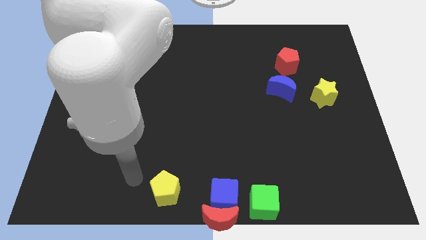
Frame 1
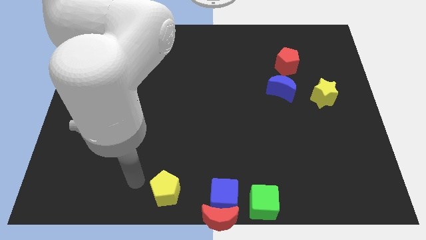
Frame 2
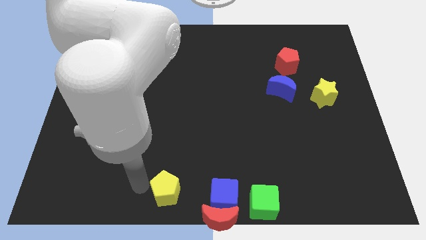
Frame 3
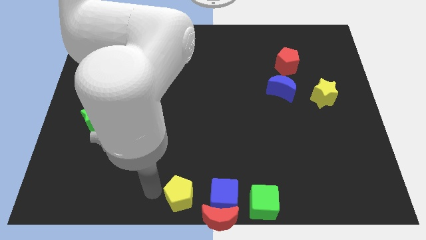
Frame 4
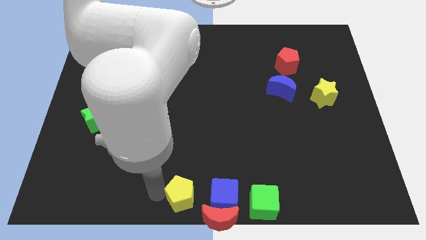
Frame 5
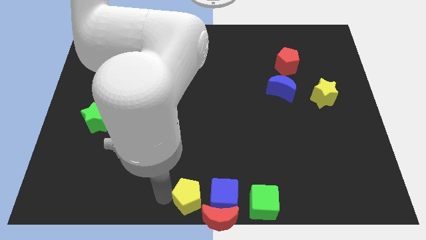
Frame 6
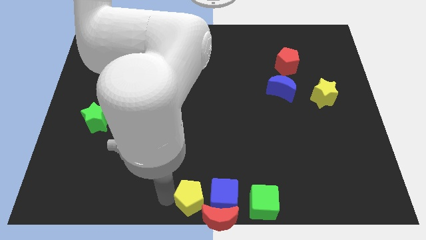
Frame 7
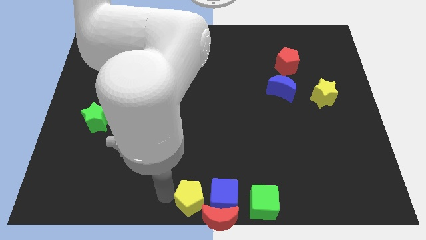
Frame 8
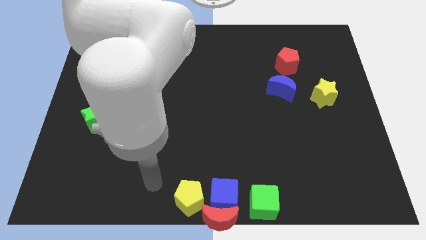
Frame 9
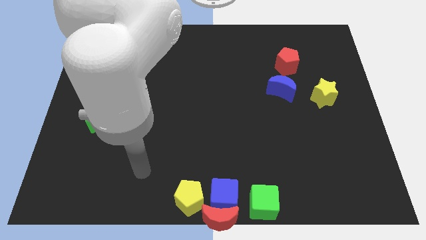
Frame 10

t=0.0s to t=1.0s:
slide yellow pentagon close to the bottom center of the board

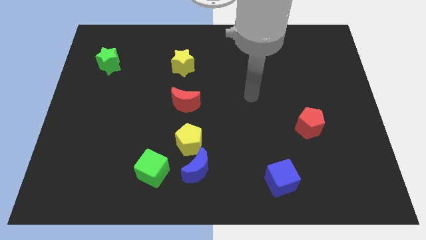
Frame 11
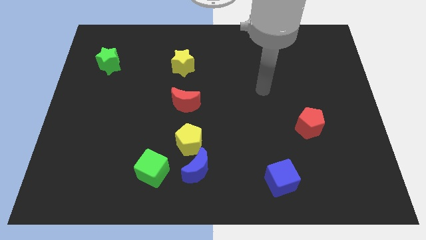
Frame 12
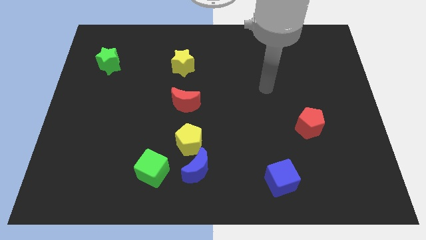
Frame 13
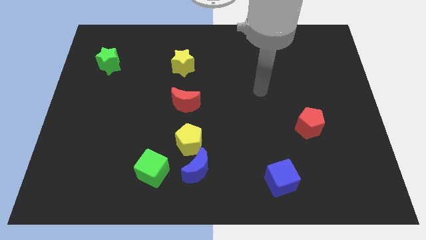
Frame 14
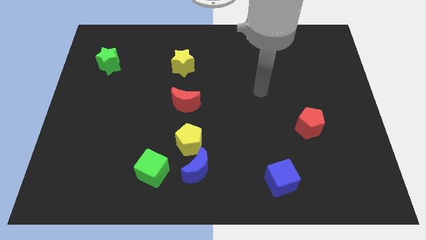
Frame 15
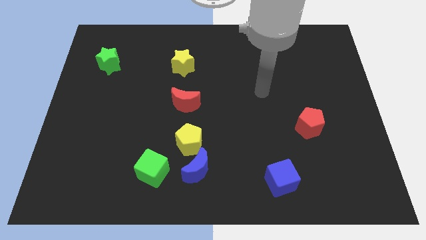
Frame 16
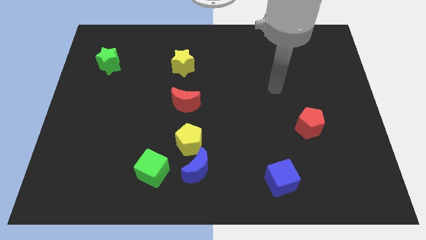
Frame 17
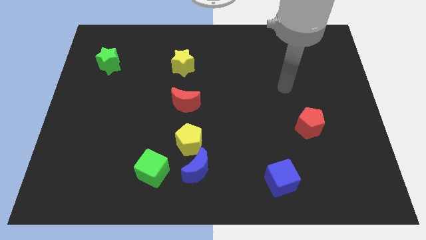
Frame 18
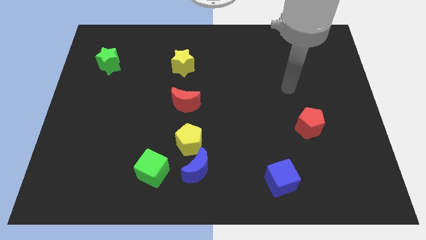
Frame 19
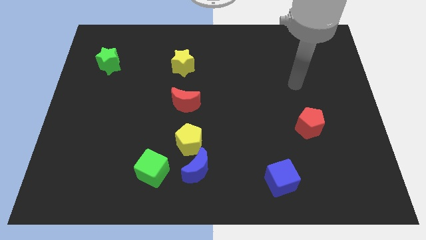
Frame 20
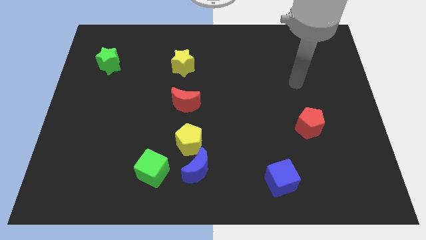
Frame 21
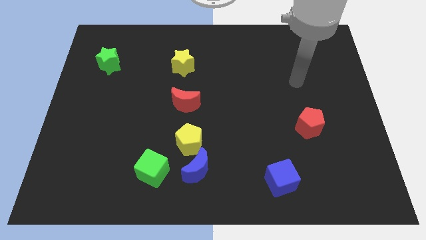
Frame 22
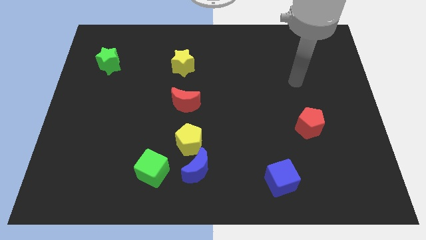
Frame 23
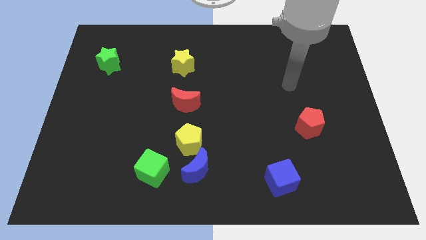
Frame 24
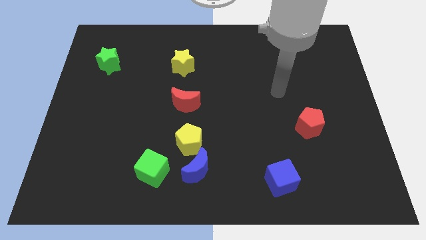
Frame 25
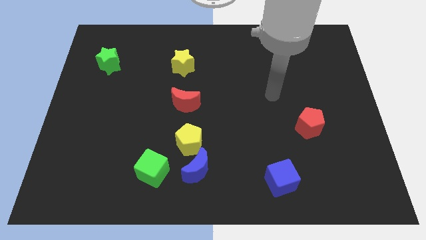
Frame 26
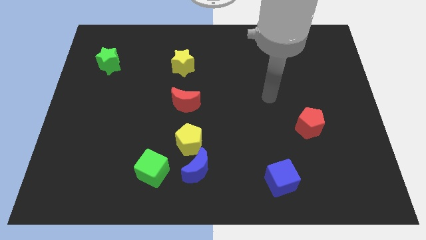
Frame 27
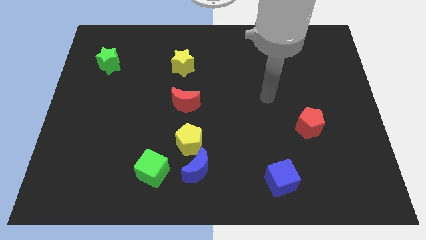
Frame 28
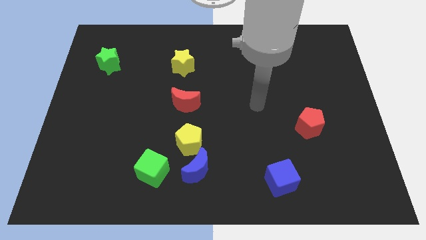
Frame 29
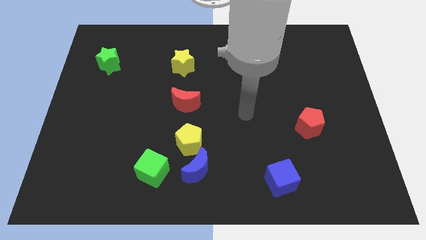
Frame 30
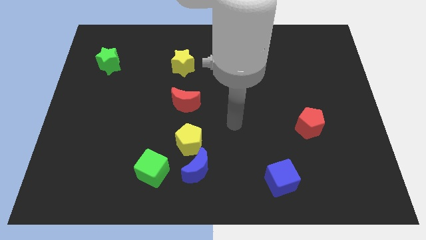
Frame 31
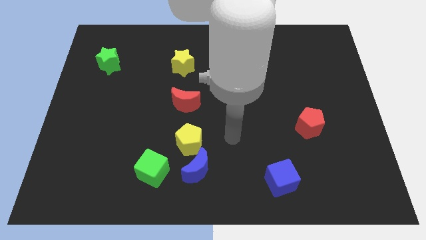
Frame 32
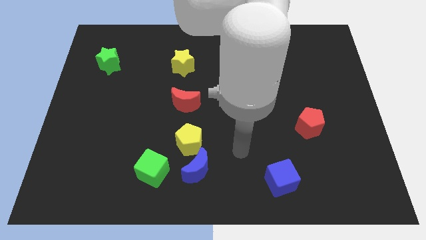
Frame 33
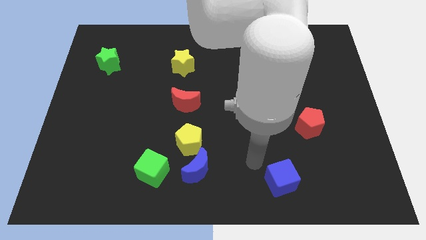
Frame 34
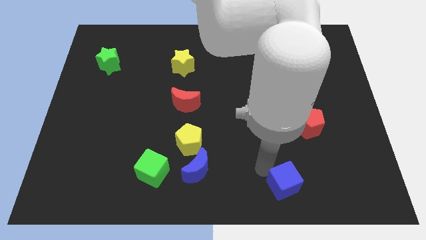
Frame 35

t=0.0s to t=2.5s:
touch the top of blue cube

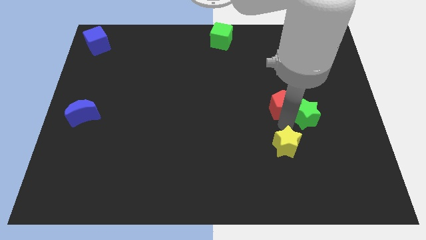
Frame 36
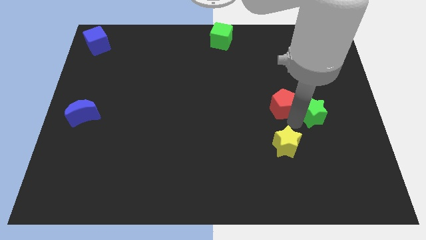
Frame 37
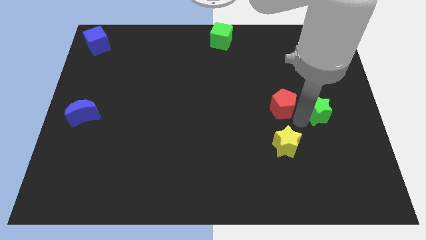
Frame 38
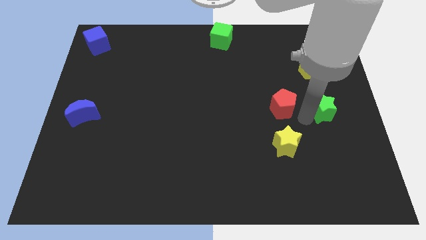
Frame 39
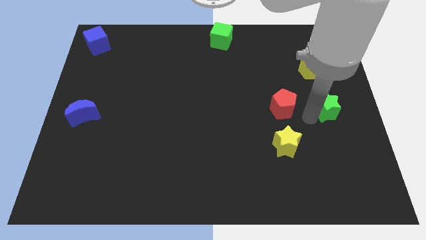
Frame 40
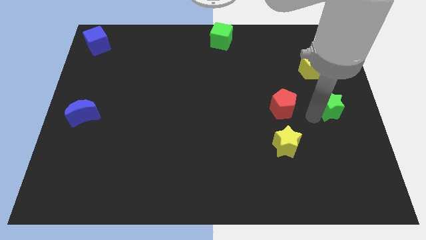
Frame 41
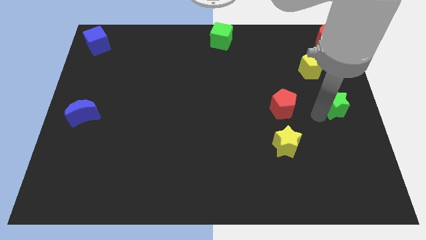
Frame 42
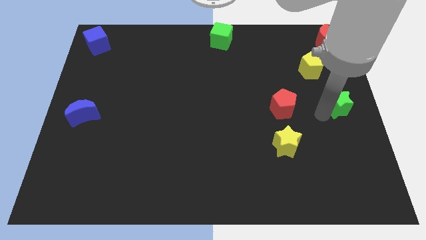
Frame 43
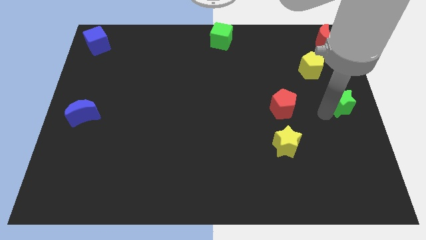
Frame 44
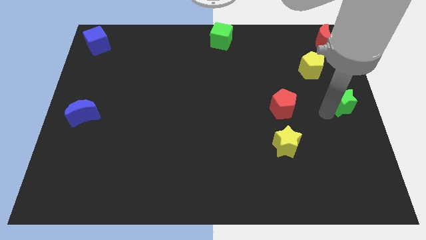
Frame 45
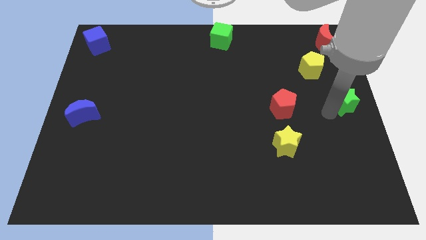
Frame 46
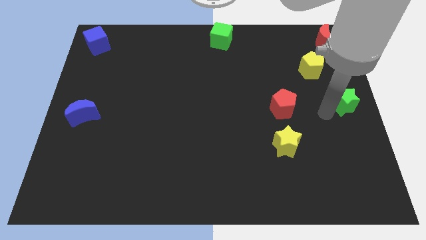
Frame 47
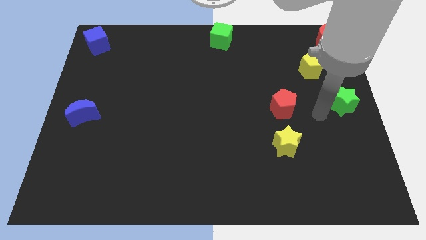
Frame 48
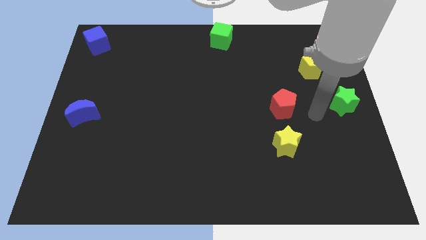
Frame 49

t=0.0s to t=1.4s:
separate green star from red pentagon

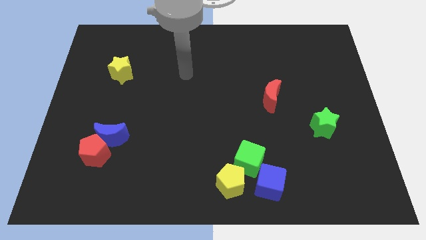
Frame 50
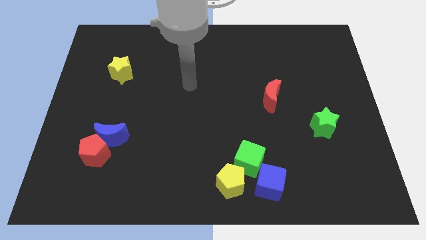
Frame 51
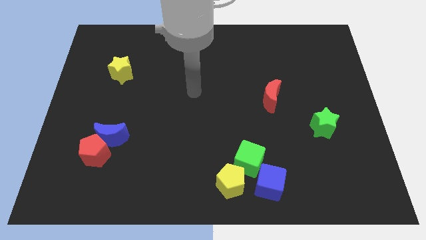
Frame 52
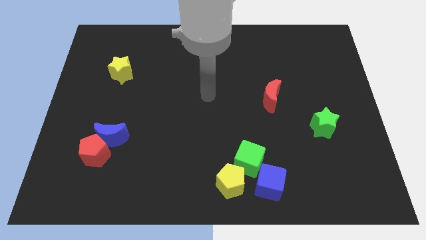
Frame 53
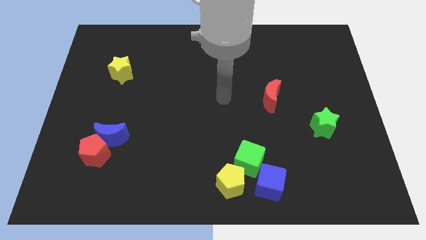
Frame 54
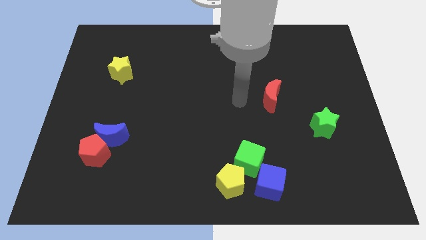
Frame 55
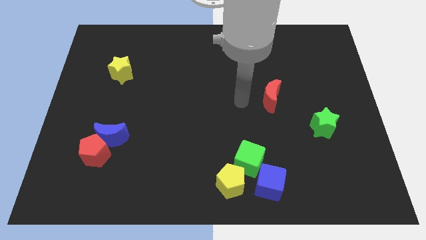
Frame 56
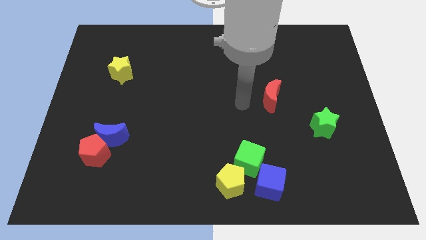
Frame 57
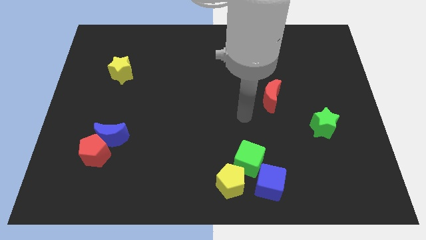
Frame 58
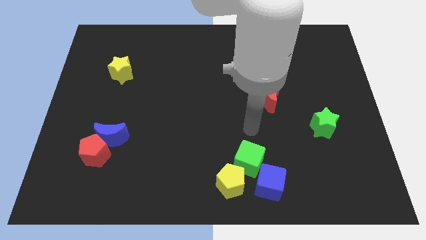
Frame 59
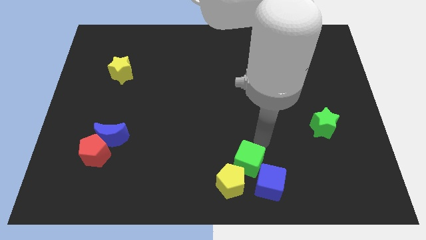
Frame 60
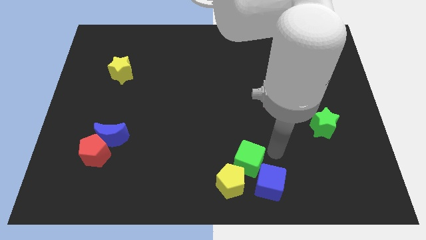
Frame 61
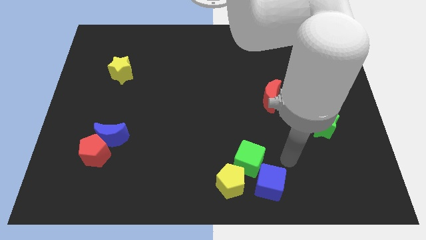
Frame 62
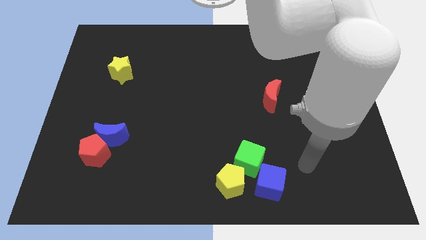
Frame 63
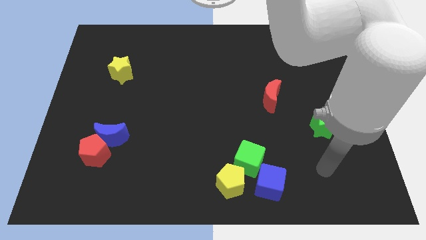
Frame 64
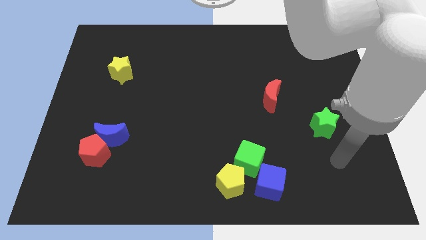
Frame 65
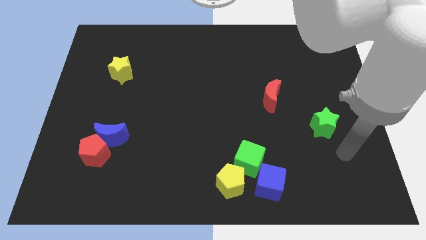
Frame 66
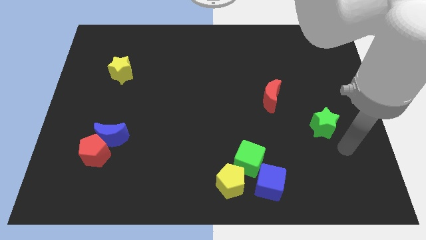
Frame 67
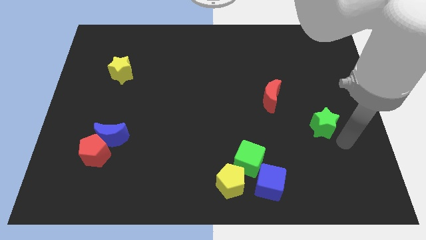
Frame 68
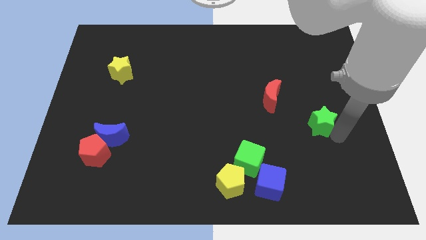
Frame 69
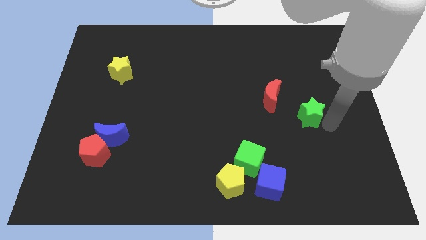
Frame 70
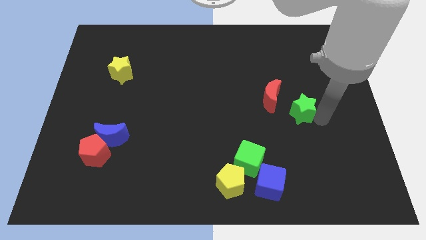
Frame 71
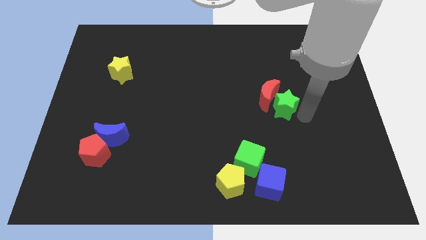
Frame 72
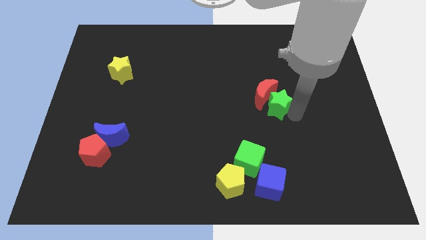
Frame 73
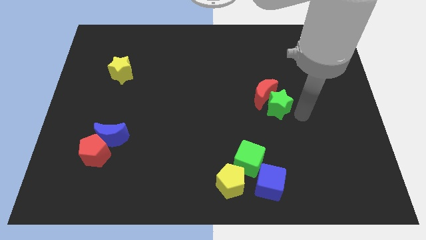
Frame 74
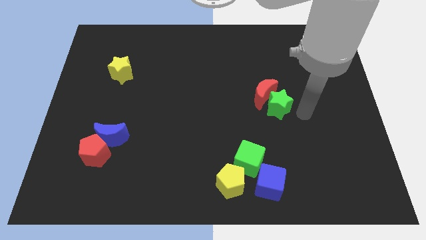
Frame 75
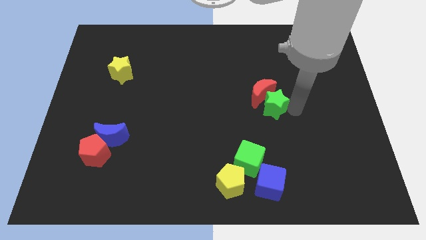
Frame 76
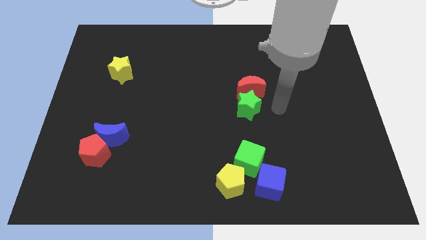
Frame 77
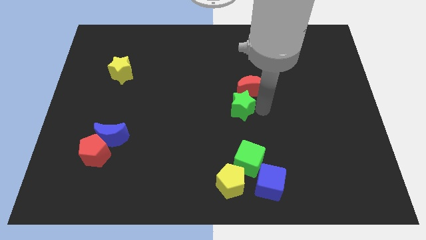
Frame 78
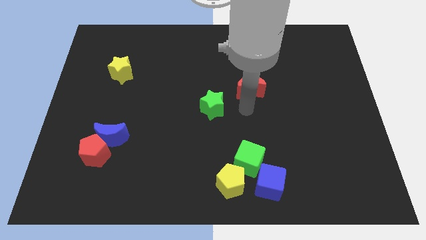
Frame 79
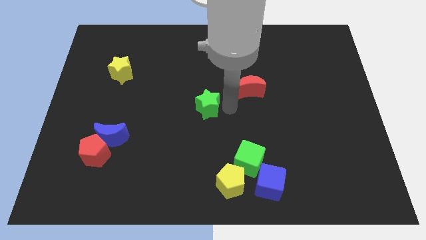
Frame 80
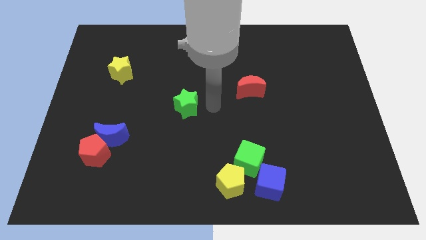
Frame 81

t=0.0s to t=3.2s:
place the green star into red crescent

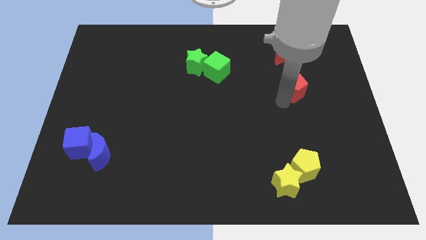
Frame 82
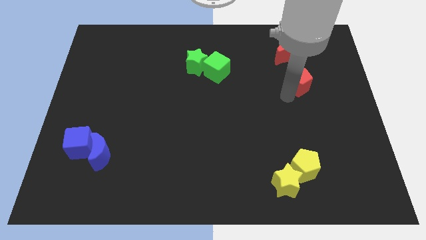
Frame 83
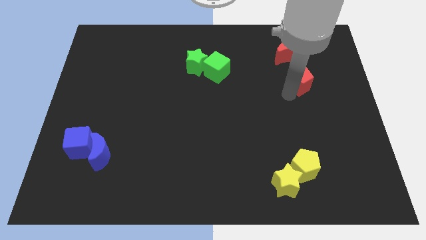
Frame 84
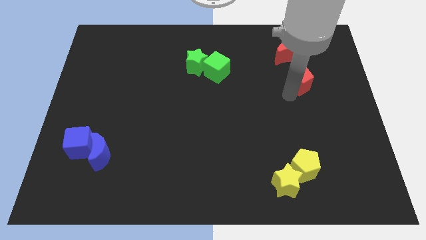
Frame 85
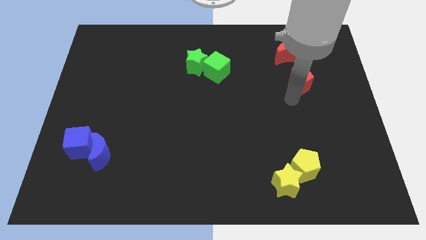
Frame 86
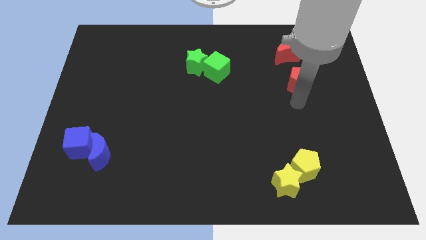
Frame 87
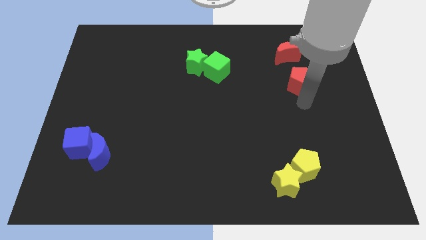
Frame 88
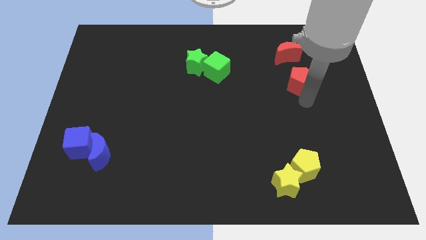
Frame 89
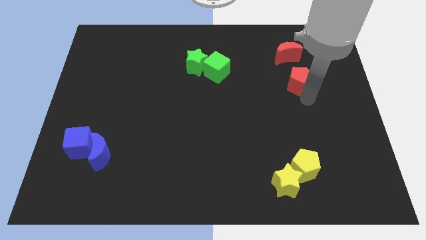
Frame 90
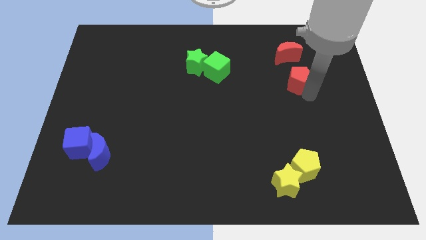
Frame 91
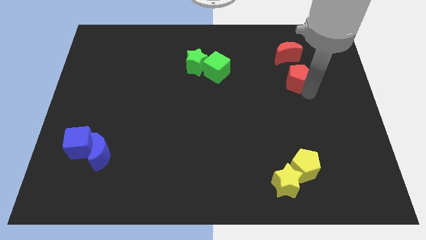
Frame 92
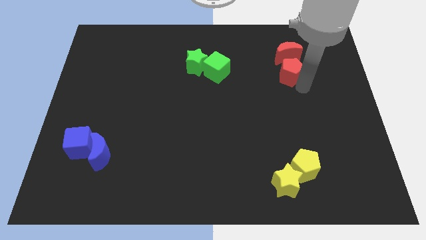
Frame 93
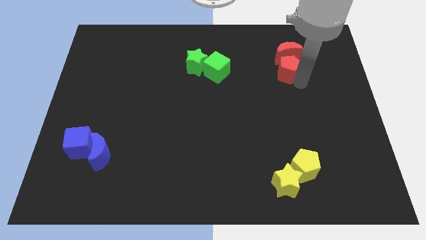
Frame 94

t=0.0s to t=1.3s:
place the red pentagon below the red crescent
